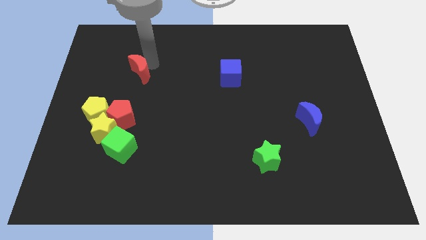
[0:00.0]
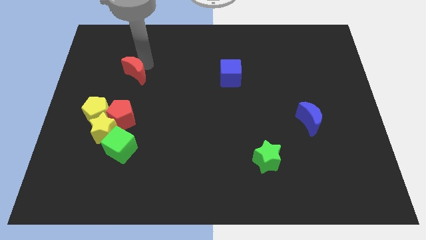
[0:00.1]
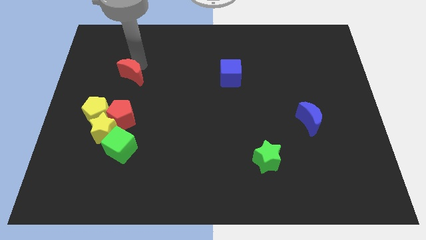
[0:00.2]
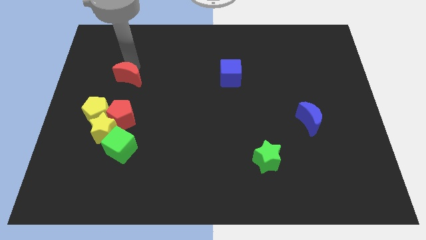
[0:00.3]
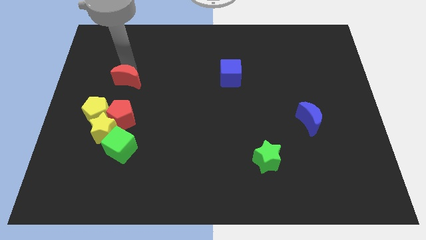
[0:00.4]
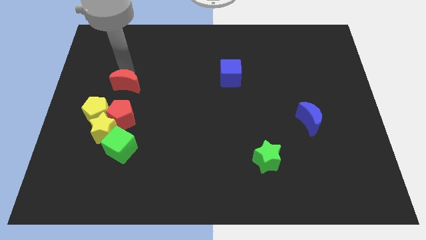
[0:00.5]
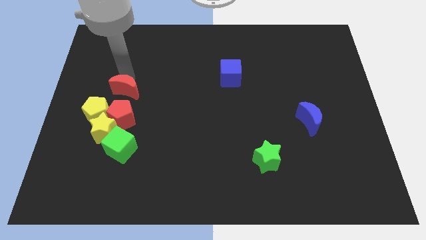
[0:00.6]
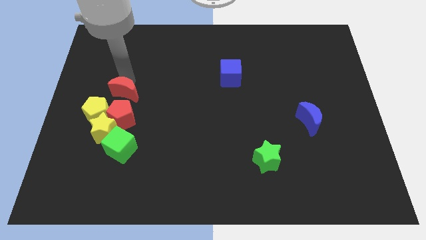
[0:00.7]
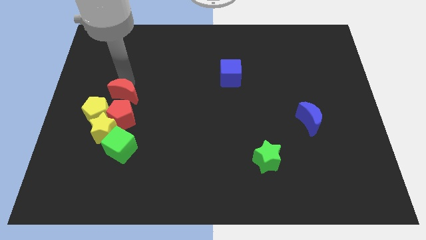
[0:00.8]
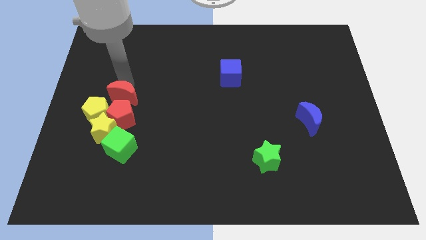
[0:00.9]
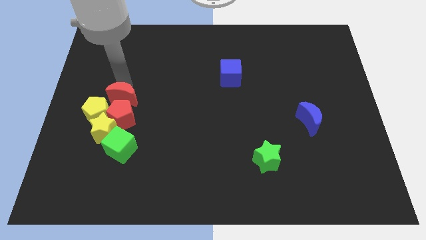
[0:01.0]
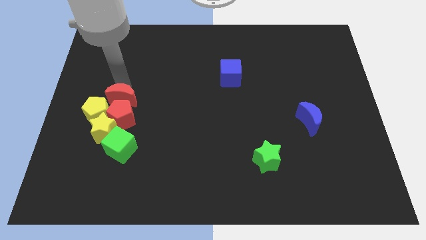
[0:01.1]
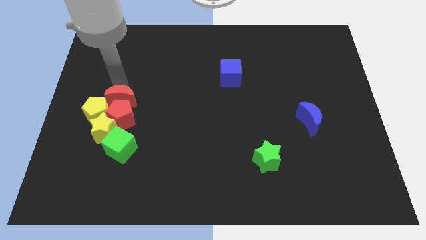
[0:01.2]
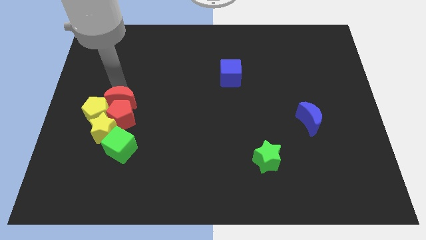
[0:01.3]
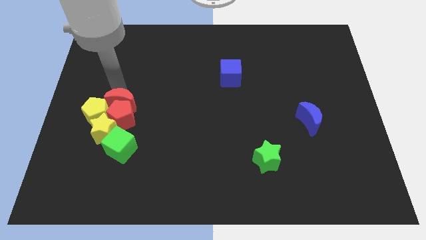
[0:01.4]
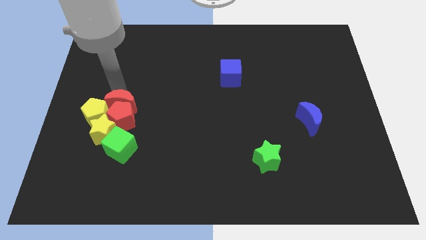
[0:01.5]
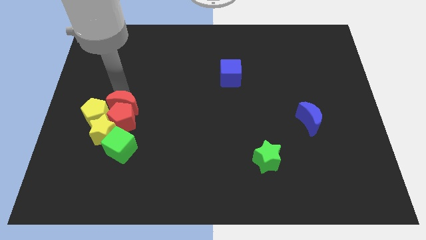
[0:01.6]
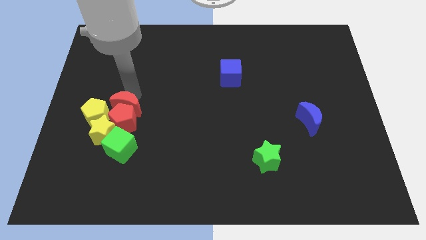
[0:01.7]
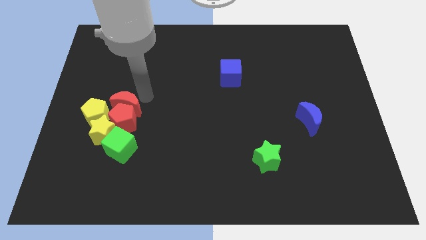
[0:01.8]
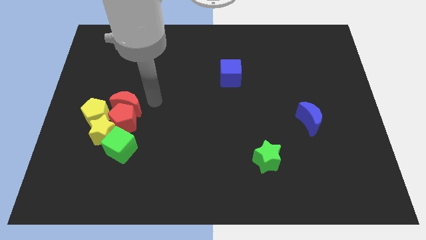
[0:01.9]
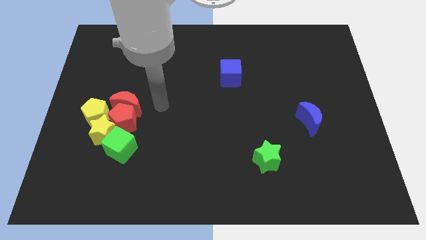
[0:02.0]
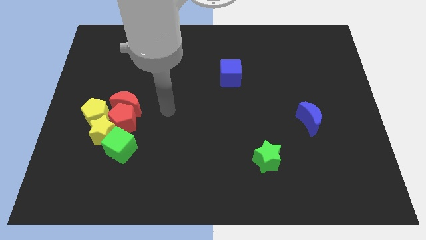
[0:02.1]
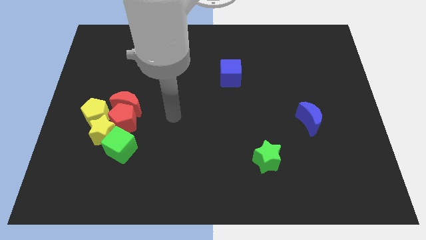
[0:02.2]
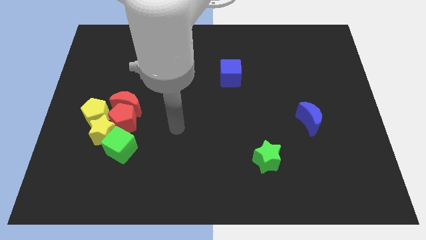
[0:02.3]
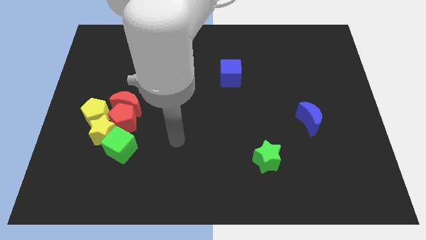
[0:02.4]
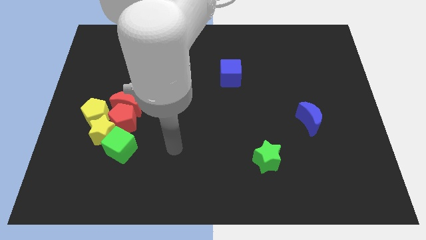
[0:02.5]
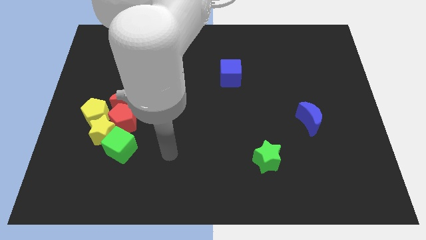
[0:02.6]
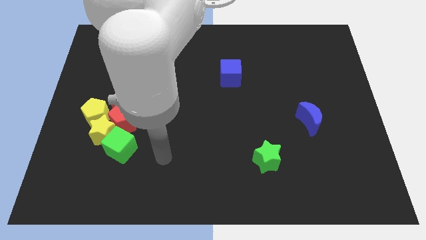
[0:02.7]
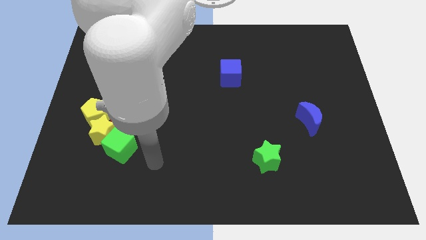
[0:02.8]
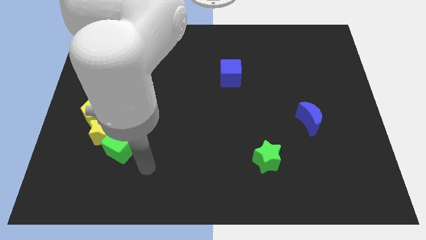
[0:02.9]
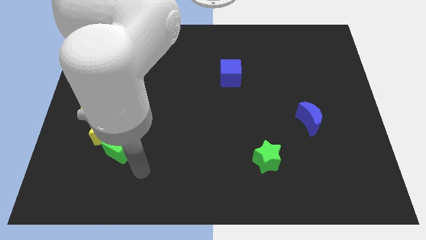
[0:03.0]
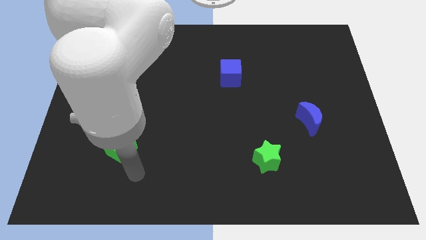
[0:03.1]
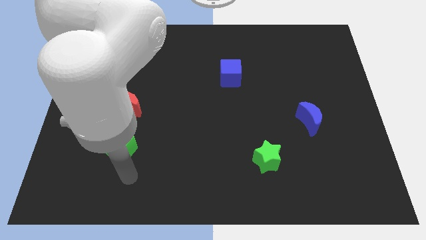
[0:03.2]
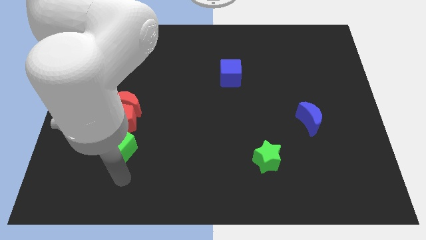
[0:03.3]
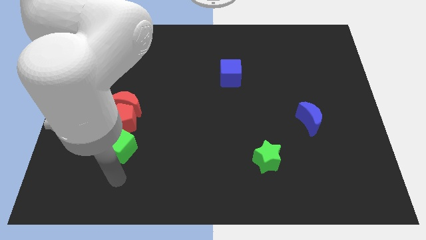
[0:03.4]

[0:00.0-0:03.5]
push the red moon into the red pentagon

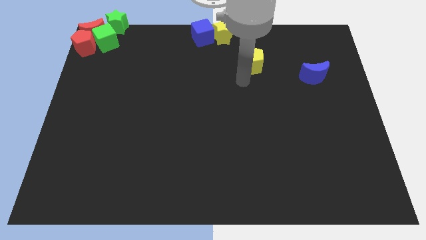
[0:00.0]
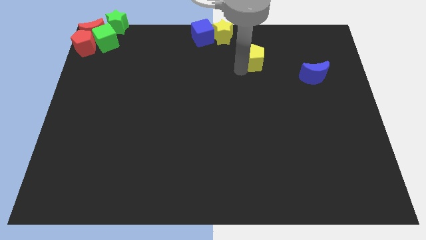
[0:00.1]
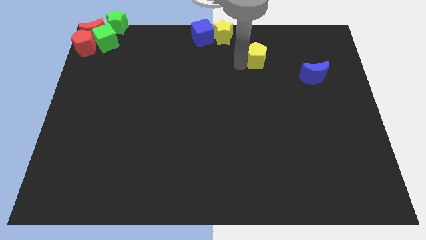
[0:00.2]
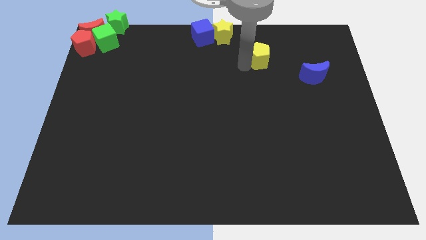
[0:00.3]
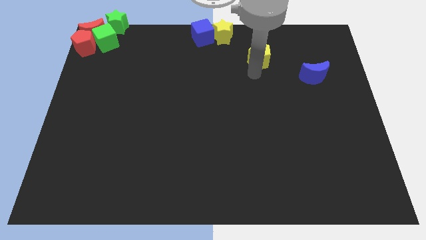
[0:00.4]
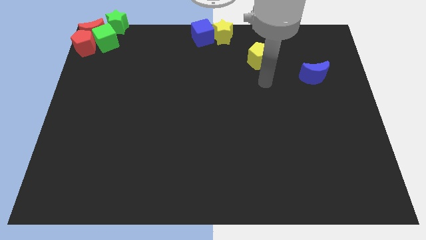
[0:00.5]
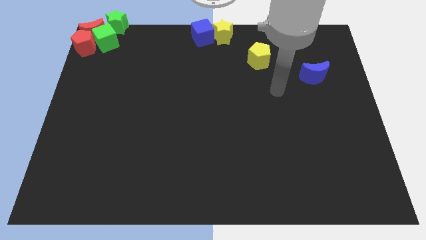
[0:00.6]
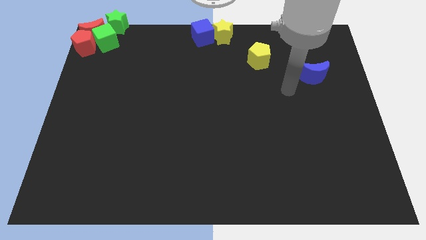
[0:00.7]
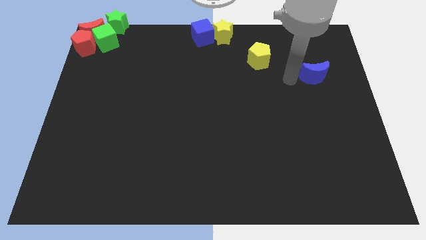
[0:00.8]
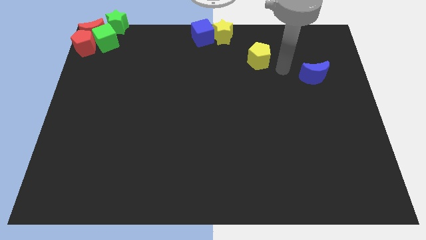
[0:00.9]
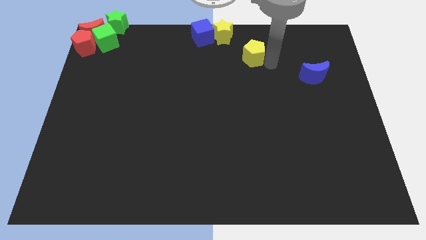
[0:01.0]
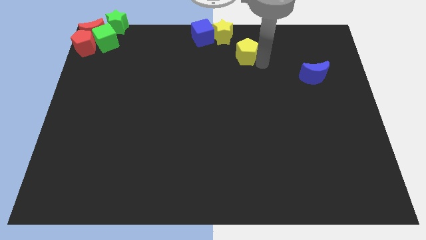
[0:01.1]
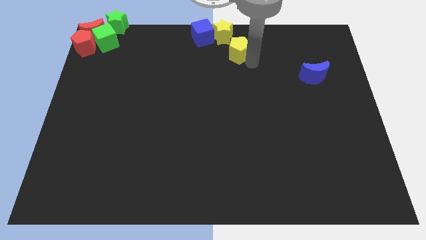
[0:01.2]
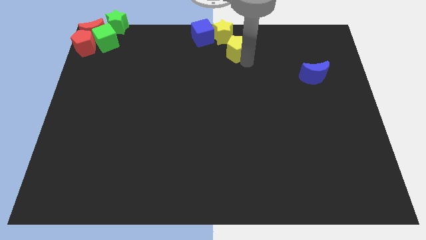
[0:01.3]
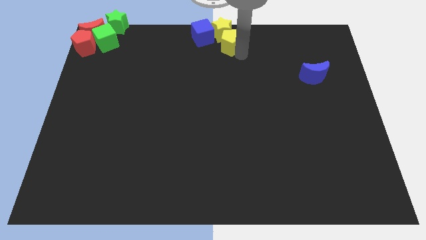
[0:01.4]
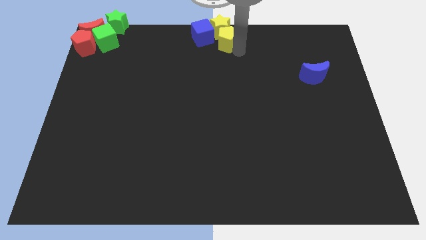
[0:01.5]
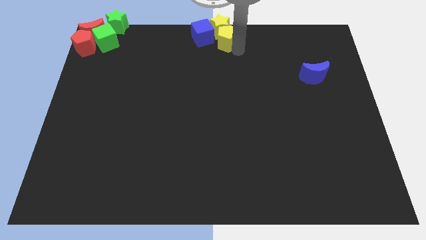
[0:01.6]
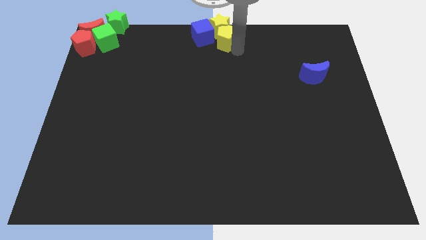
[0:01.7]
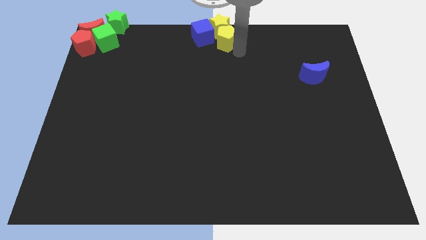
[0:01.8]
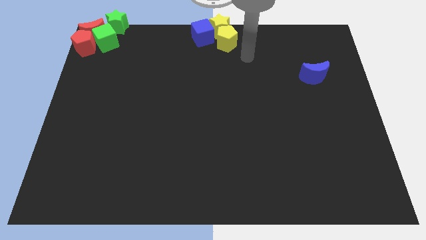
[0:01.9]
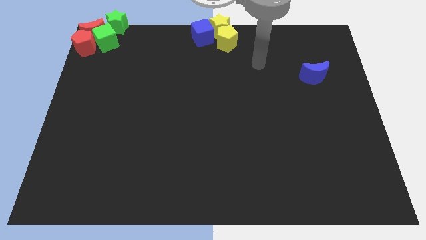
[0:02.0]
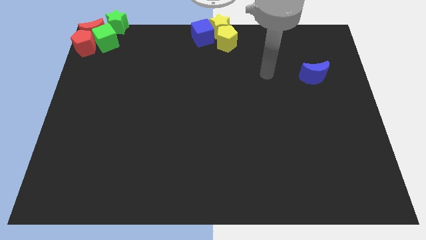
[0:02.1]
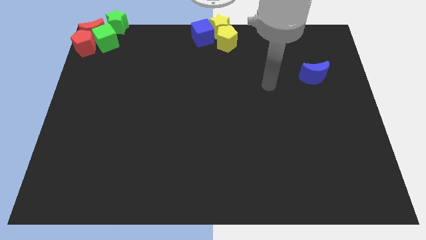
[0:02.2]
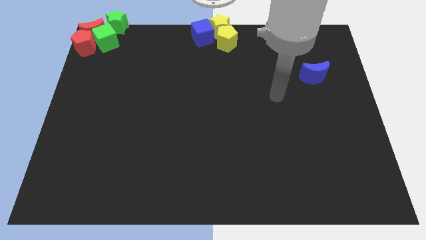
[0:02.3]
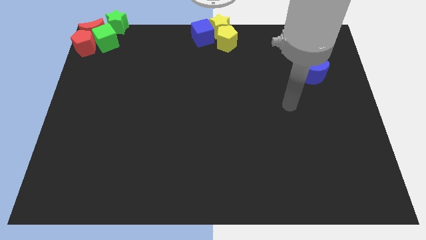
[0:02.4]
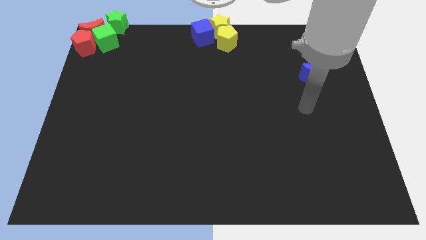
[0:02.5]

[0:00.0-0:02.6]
push the yellow pentagon into the bottom side of the yellow star

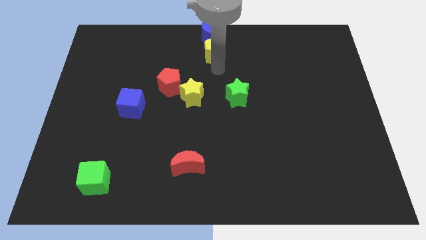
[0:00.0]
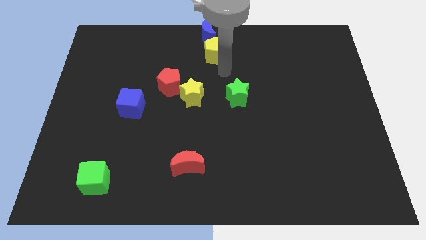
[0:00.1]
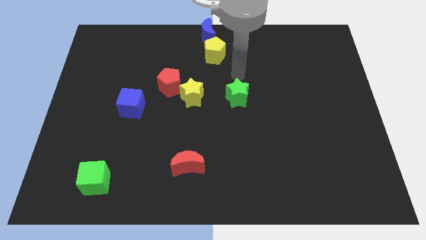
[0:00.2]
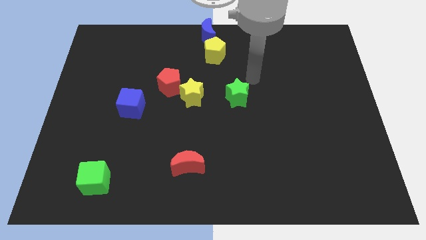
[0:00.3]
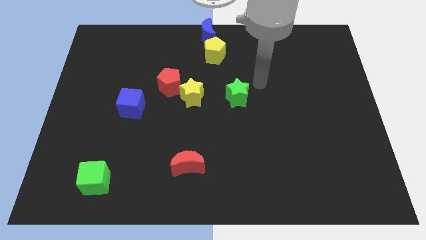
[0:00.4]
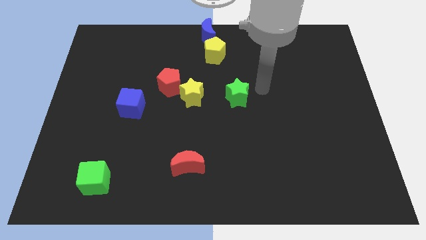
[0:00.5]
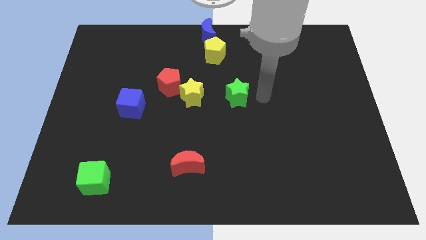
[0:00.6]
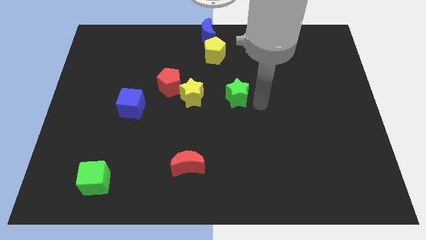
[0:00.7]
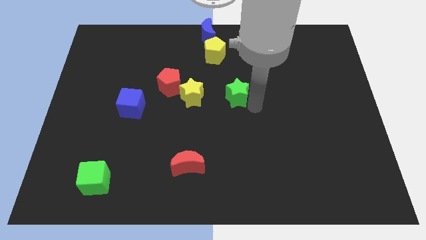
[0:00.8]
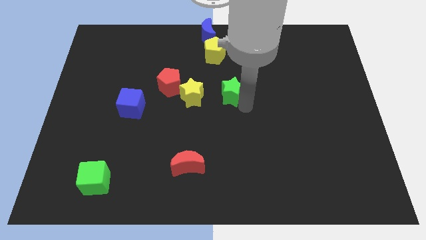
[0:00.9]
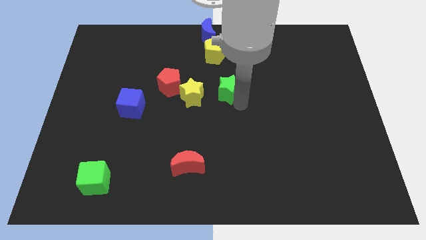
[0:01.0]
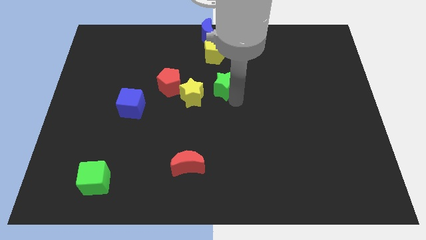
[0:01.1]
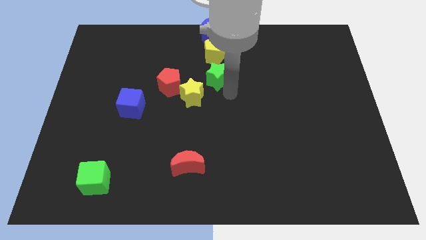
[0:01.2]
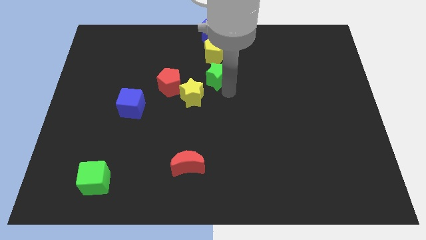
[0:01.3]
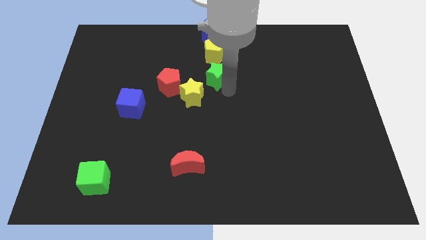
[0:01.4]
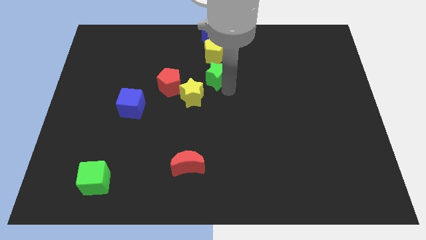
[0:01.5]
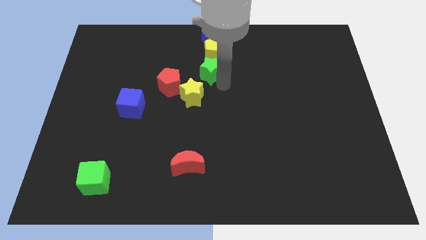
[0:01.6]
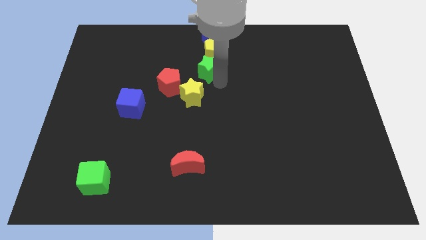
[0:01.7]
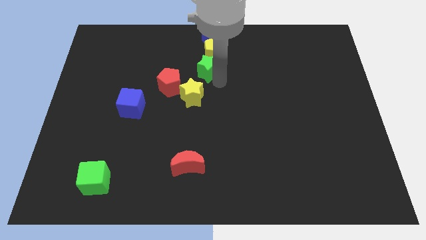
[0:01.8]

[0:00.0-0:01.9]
move the green star to the bottom side of the yellow pentagon

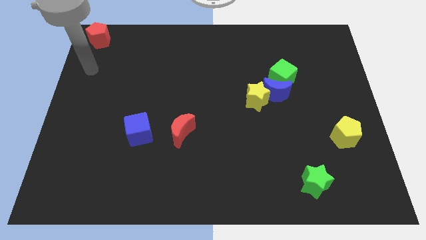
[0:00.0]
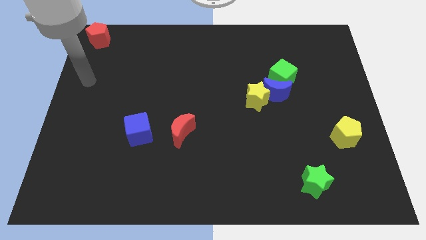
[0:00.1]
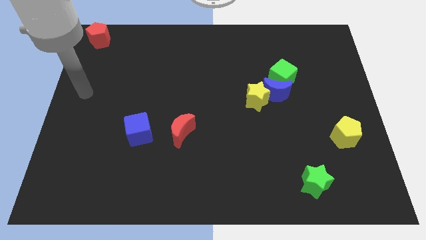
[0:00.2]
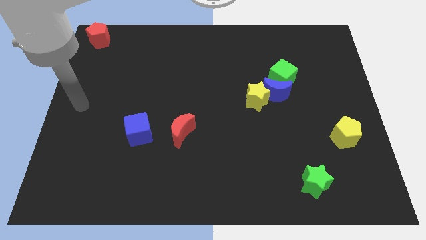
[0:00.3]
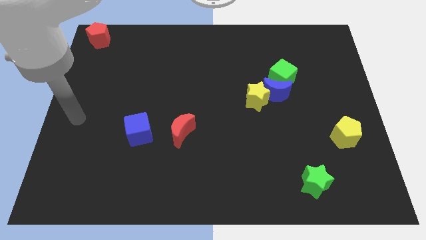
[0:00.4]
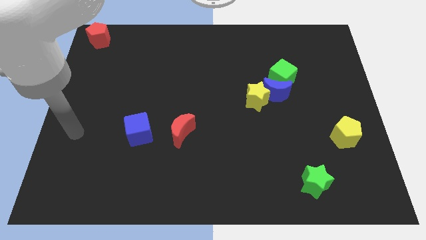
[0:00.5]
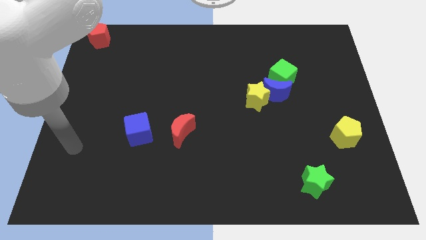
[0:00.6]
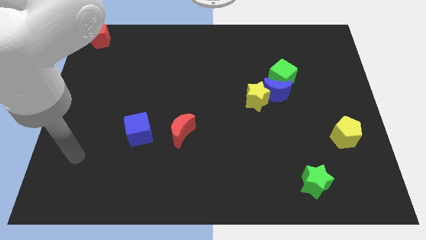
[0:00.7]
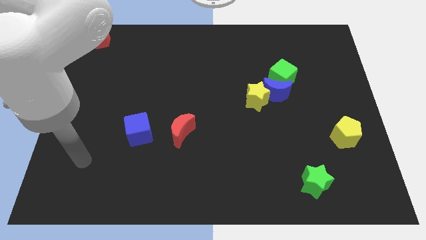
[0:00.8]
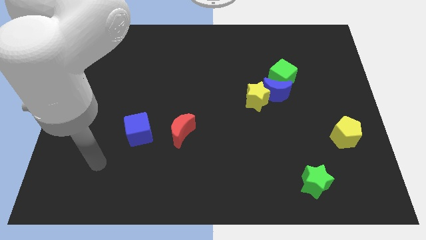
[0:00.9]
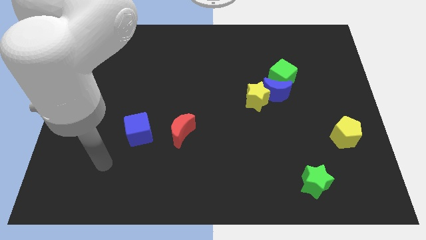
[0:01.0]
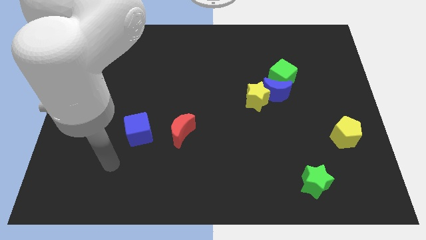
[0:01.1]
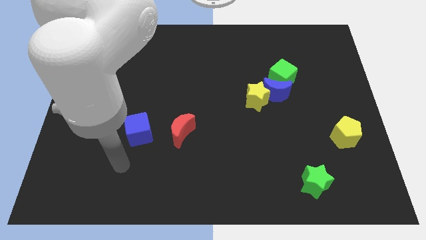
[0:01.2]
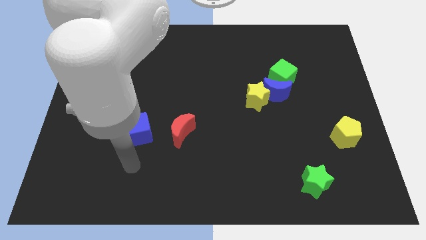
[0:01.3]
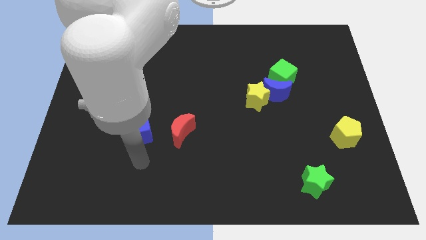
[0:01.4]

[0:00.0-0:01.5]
place your hand under the blue square
